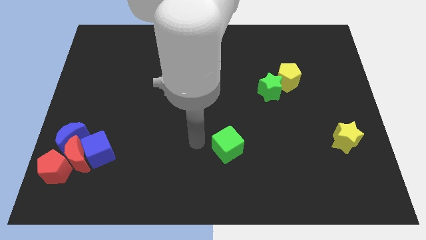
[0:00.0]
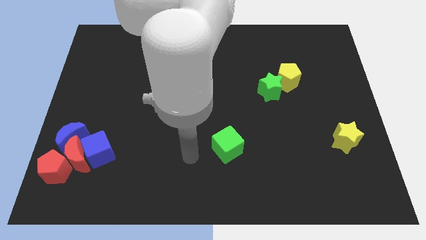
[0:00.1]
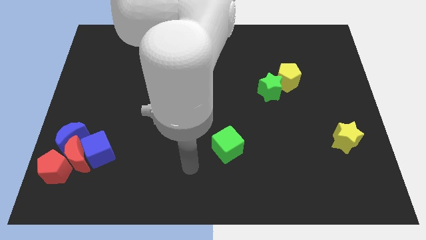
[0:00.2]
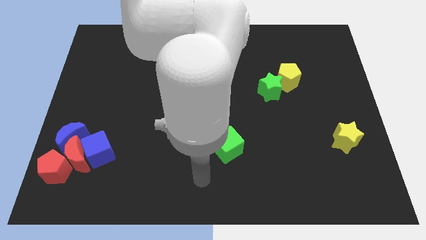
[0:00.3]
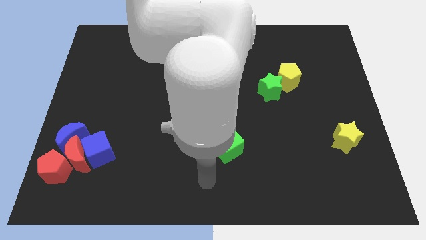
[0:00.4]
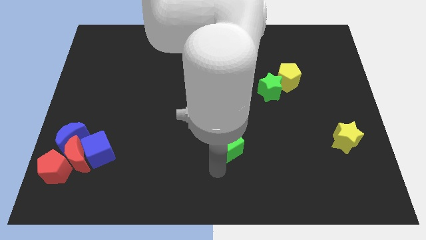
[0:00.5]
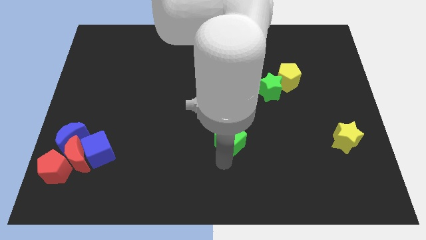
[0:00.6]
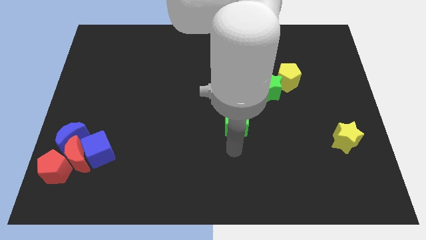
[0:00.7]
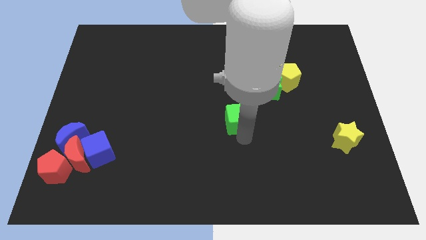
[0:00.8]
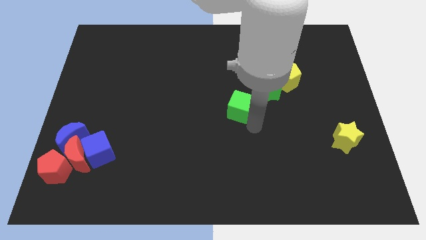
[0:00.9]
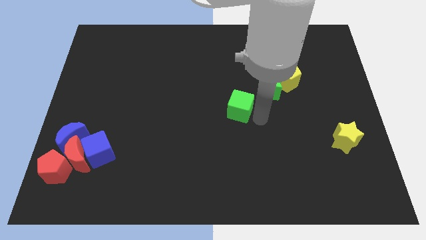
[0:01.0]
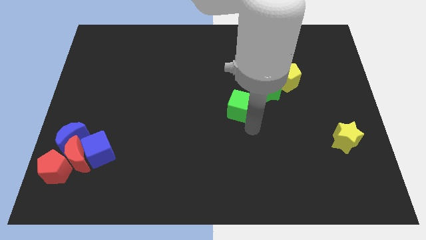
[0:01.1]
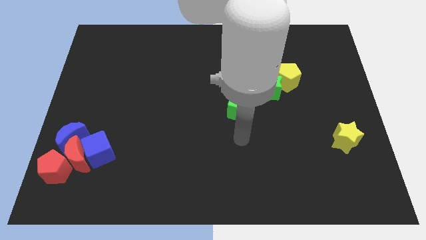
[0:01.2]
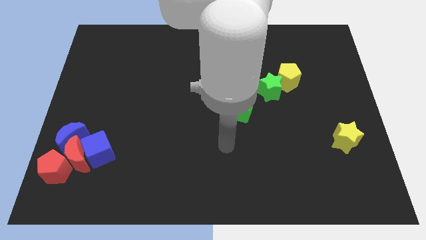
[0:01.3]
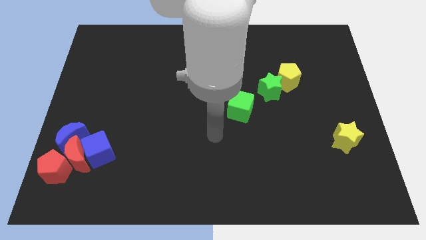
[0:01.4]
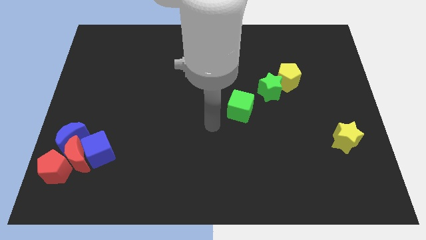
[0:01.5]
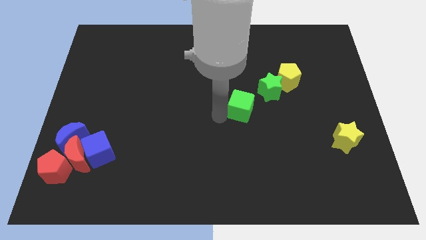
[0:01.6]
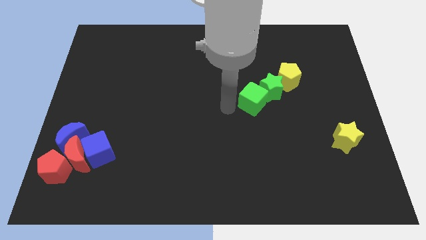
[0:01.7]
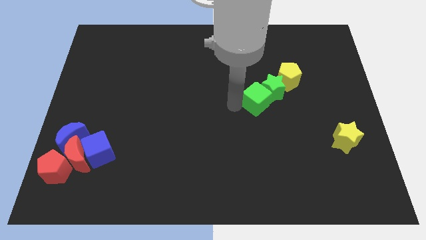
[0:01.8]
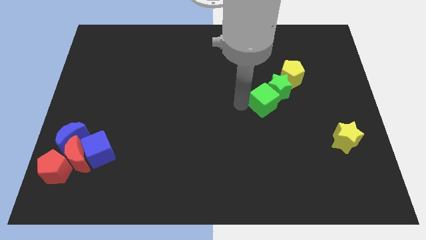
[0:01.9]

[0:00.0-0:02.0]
push the green cube into the green star

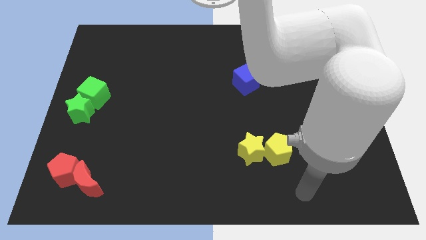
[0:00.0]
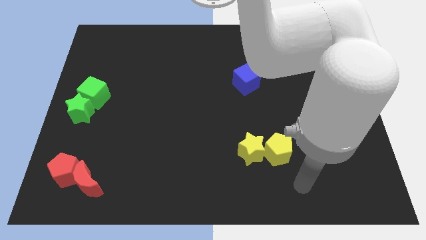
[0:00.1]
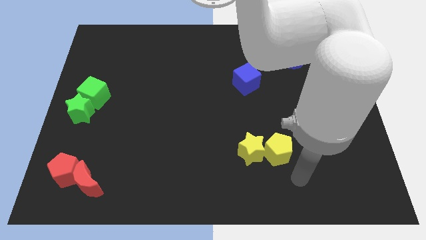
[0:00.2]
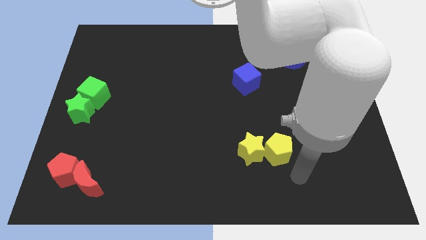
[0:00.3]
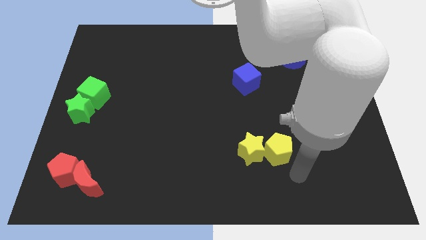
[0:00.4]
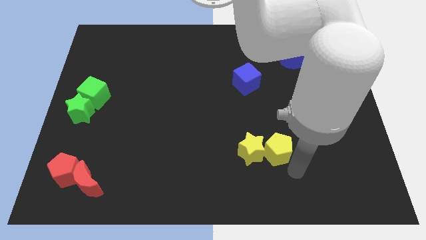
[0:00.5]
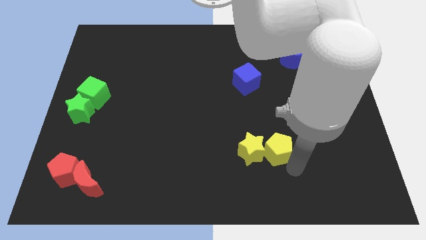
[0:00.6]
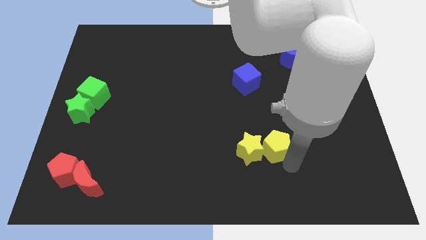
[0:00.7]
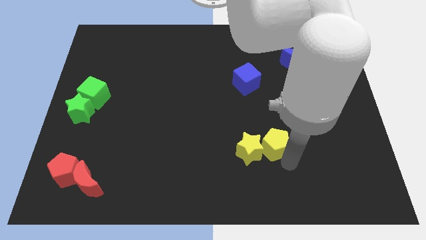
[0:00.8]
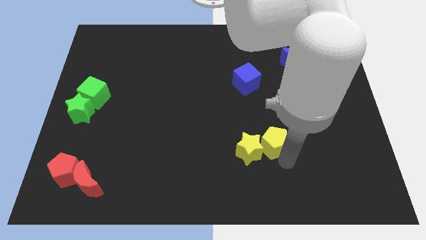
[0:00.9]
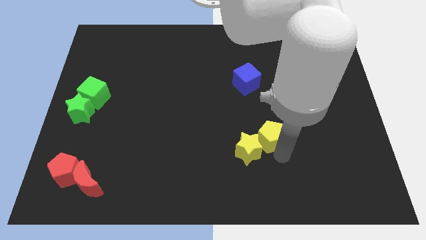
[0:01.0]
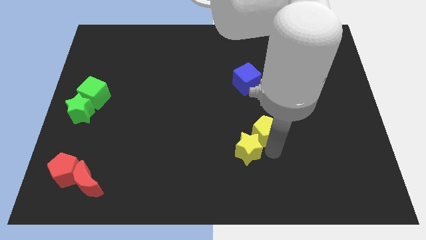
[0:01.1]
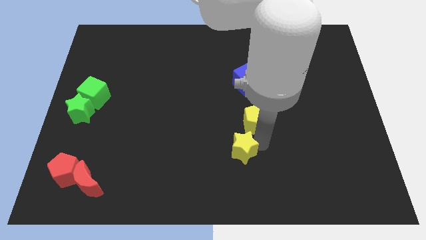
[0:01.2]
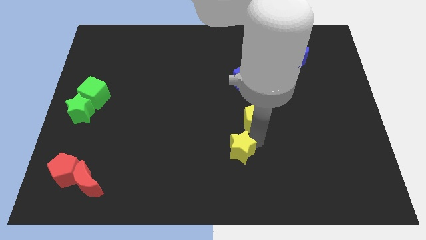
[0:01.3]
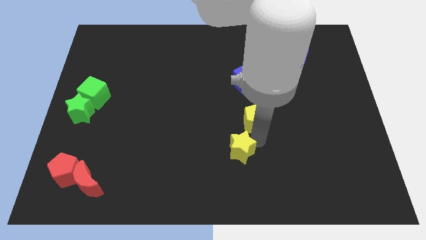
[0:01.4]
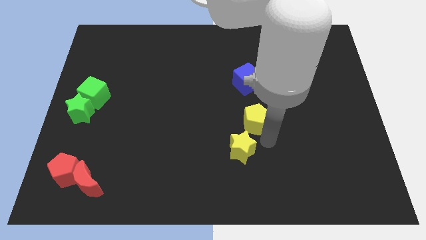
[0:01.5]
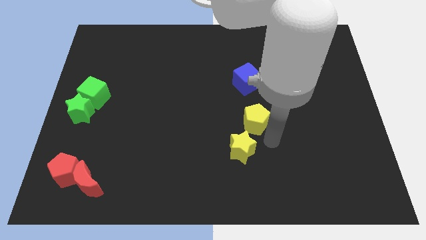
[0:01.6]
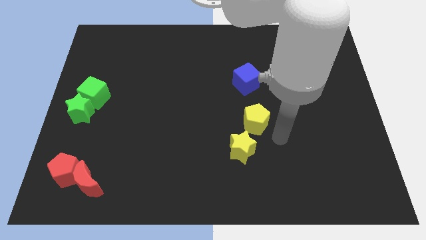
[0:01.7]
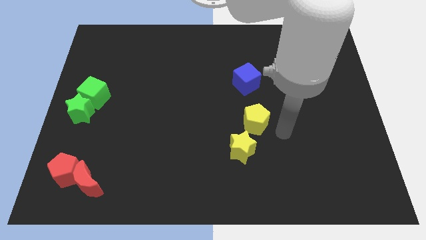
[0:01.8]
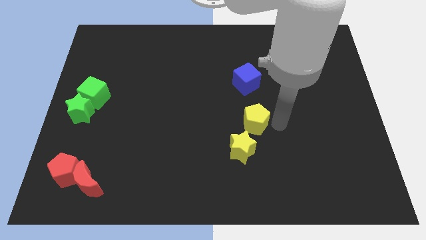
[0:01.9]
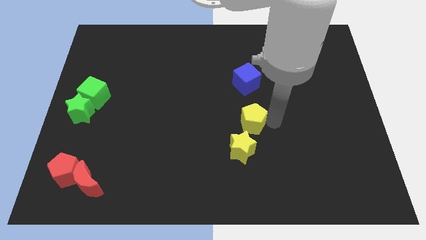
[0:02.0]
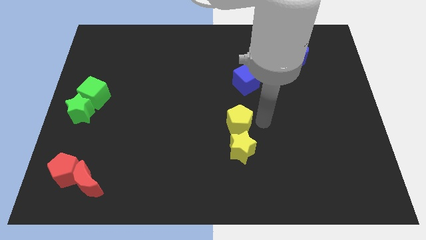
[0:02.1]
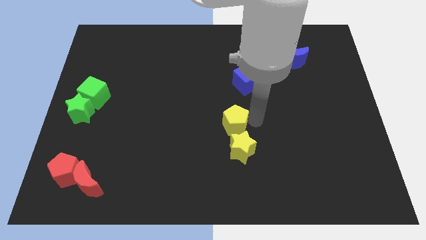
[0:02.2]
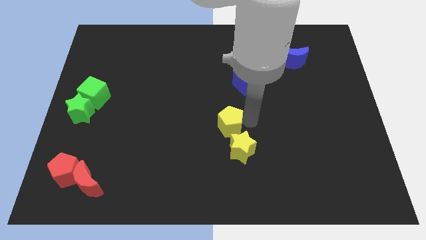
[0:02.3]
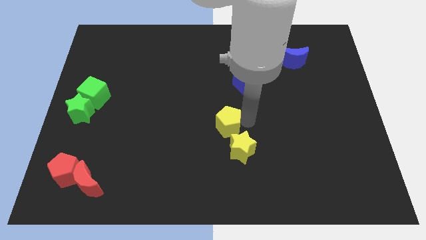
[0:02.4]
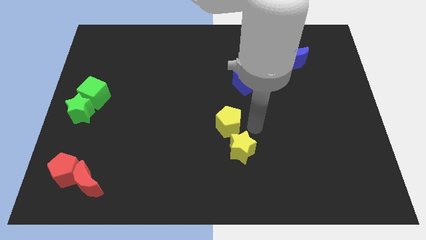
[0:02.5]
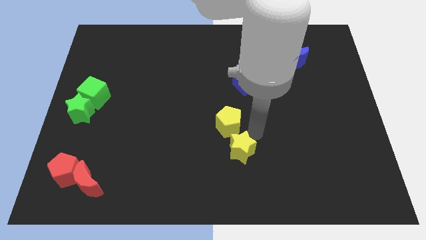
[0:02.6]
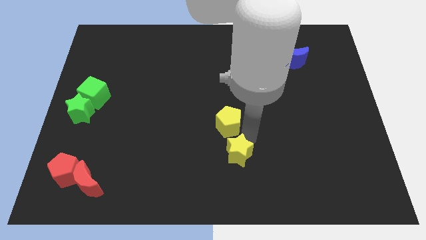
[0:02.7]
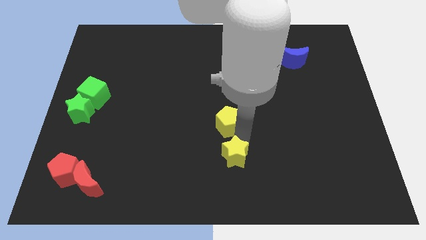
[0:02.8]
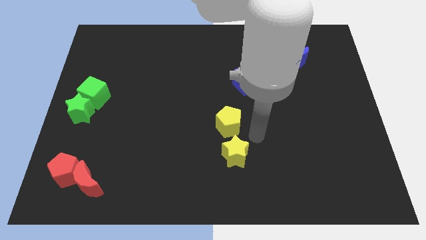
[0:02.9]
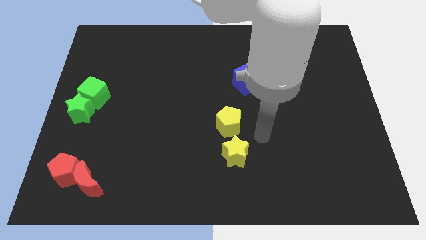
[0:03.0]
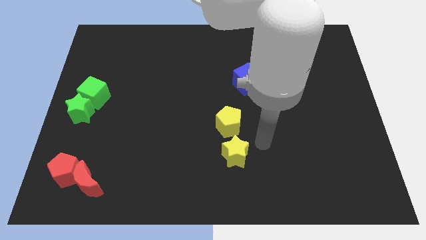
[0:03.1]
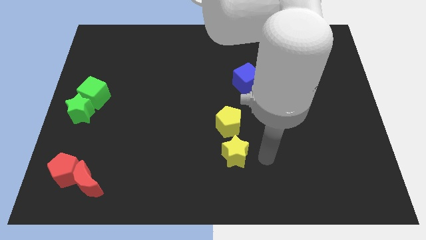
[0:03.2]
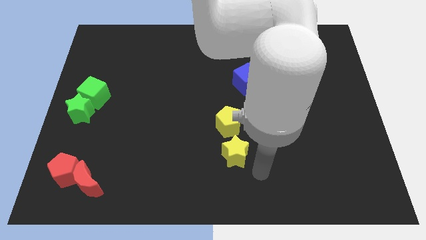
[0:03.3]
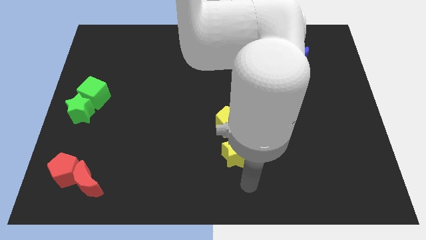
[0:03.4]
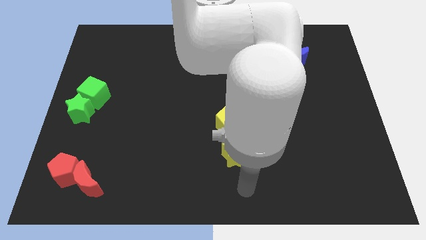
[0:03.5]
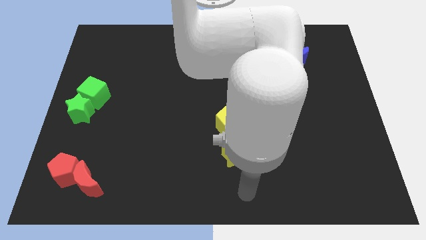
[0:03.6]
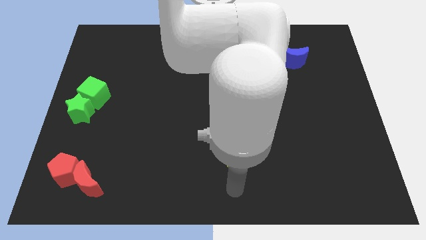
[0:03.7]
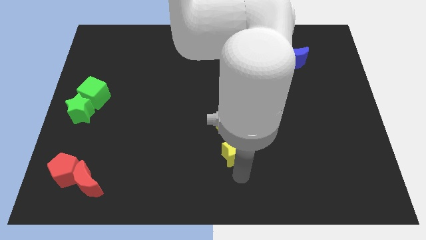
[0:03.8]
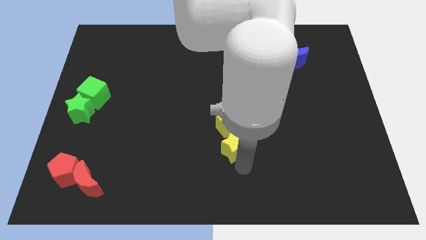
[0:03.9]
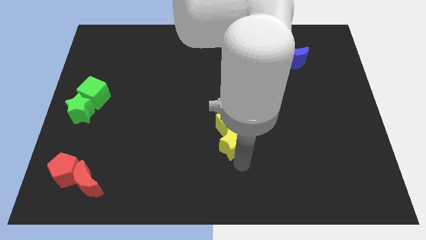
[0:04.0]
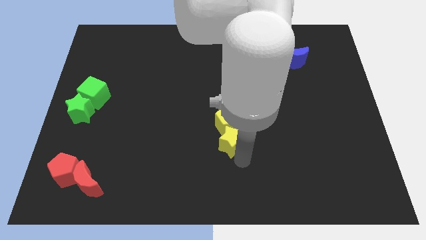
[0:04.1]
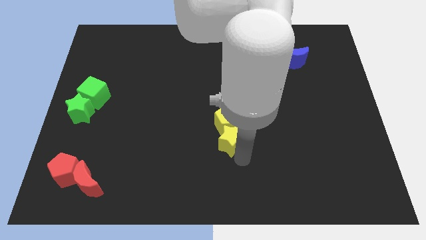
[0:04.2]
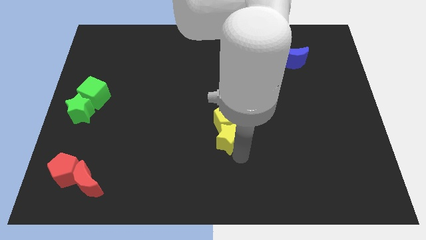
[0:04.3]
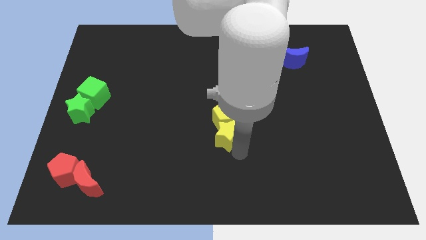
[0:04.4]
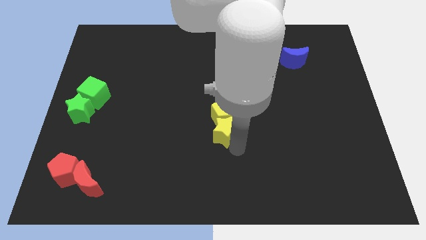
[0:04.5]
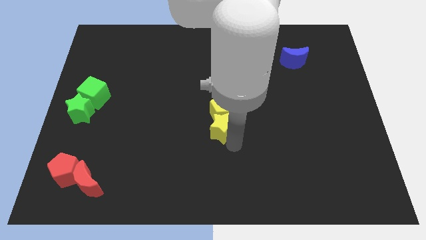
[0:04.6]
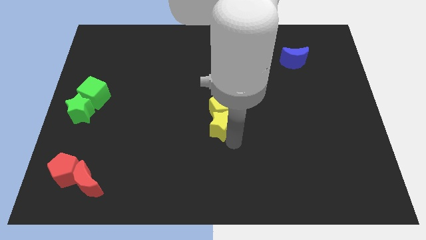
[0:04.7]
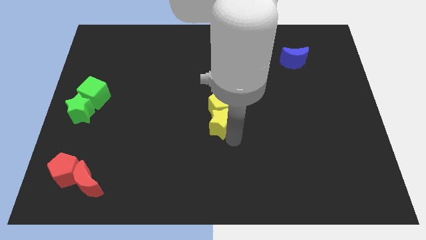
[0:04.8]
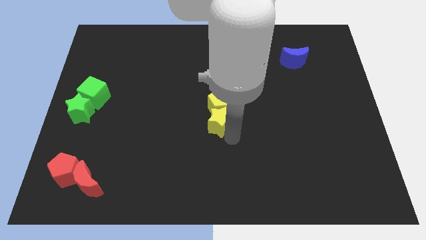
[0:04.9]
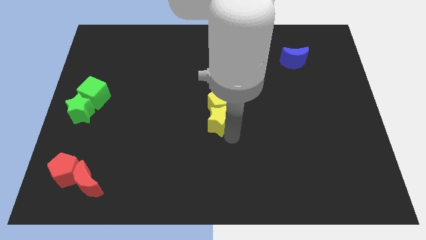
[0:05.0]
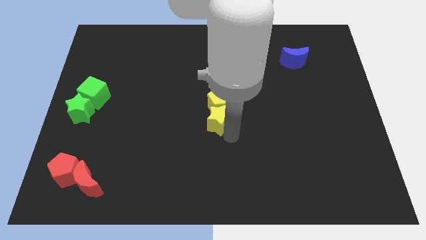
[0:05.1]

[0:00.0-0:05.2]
slide the yellow blocks towards the center of the board

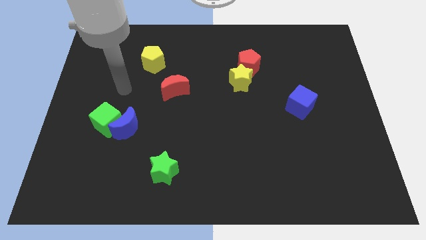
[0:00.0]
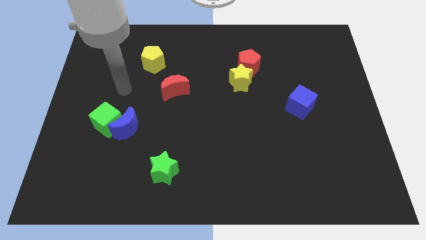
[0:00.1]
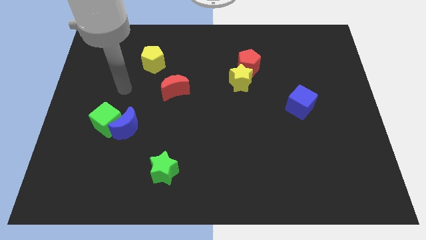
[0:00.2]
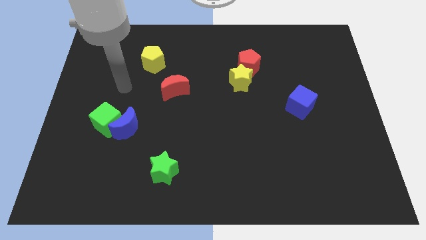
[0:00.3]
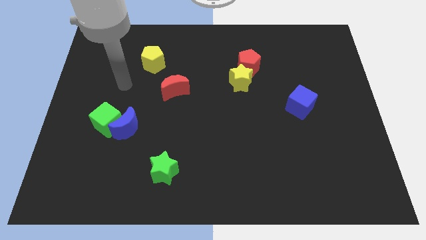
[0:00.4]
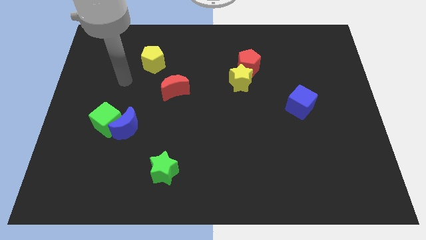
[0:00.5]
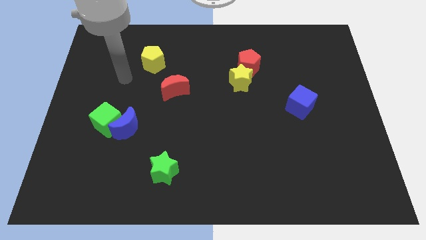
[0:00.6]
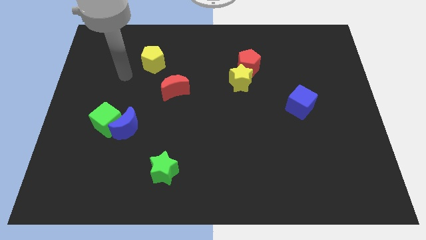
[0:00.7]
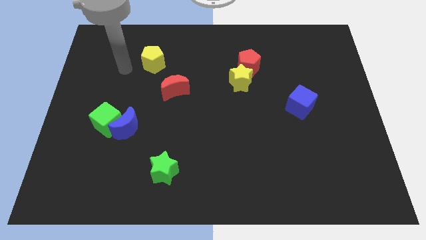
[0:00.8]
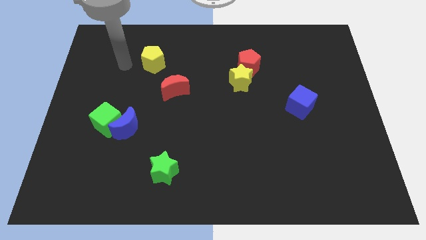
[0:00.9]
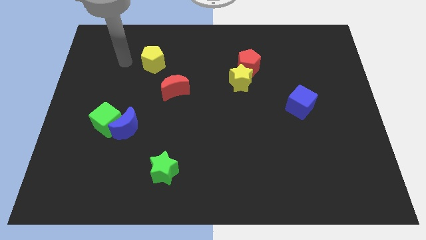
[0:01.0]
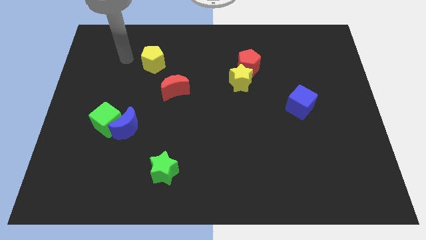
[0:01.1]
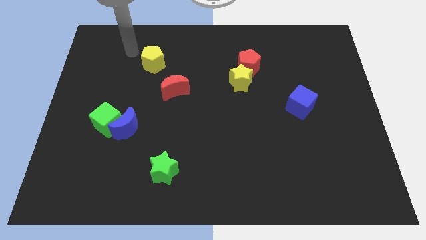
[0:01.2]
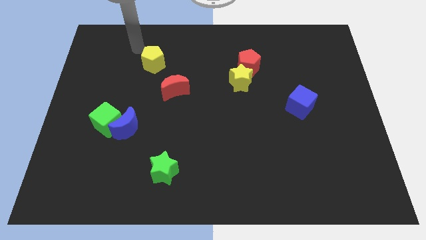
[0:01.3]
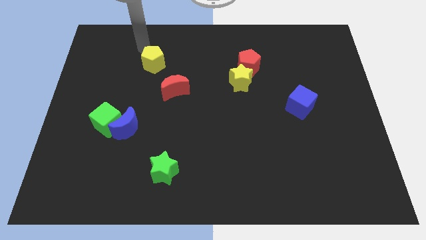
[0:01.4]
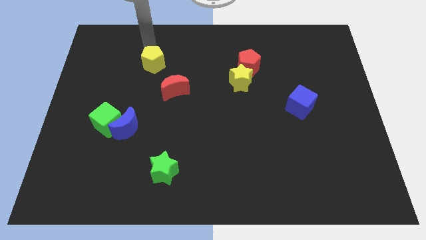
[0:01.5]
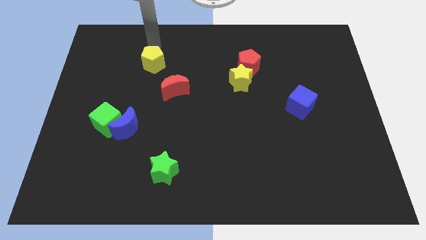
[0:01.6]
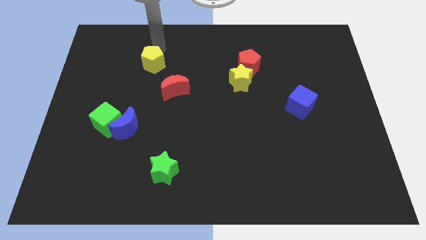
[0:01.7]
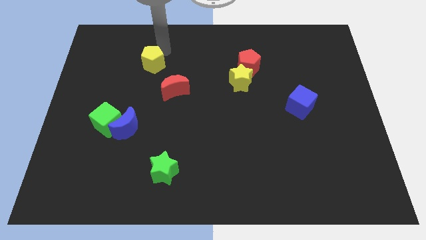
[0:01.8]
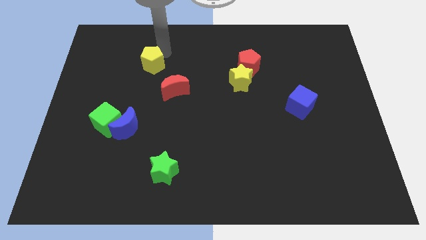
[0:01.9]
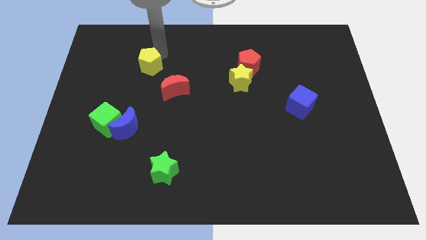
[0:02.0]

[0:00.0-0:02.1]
push the arm towards the yellow pentagon
